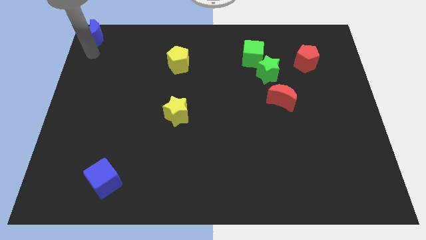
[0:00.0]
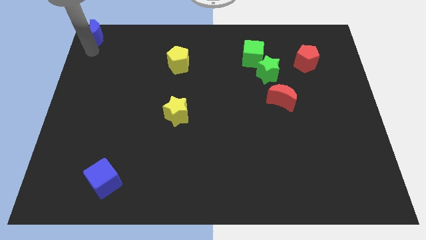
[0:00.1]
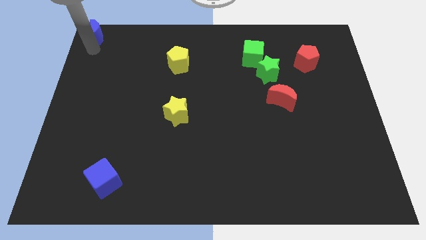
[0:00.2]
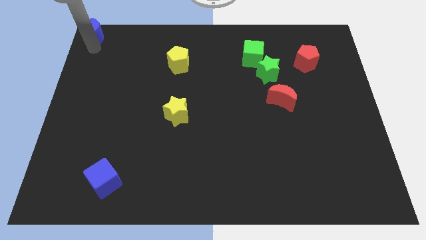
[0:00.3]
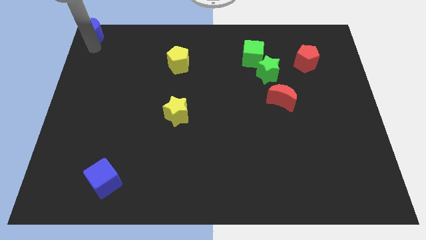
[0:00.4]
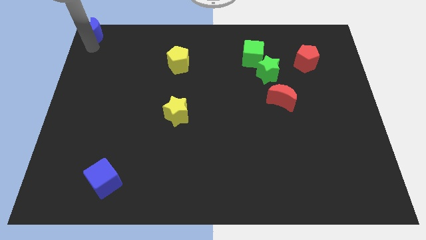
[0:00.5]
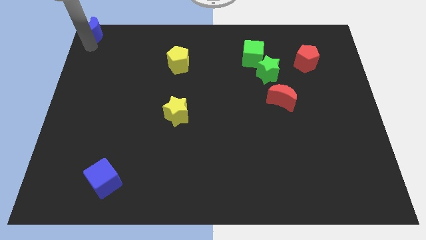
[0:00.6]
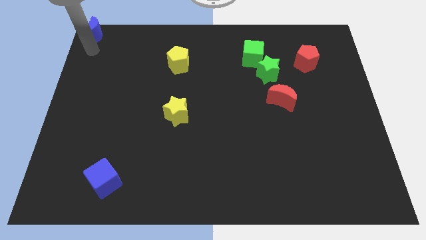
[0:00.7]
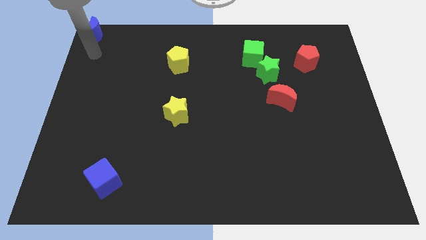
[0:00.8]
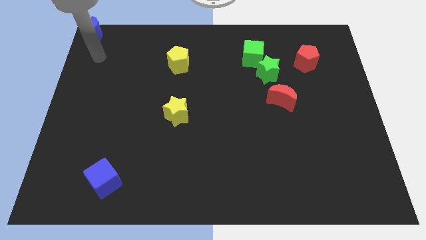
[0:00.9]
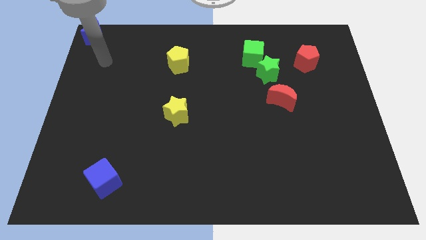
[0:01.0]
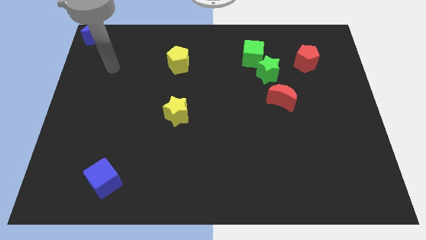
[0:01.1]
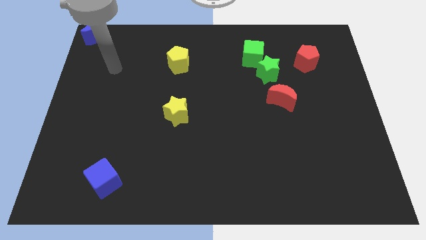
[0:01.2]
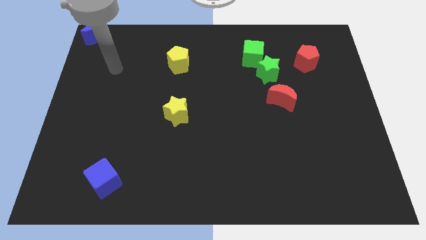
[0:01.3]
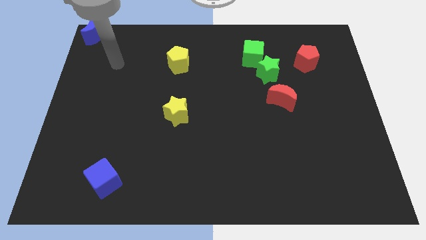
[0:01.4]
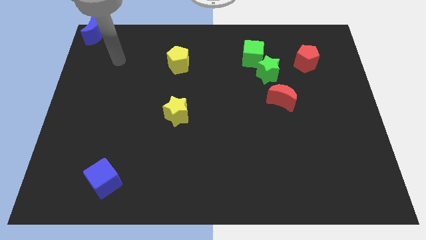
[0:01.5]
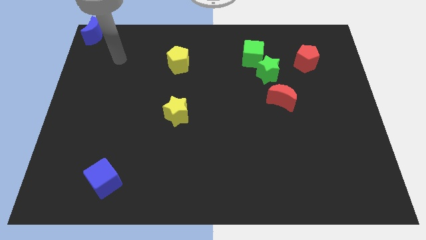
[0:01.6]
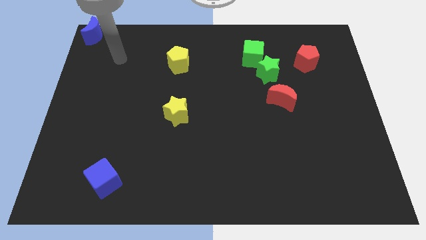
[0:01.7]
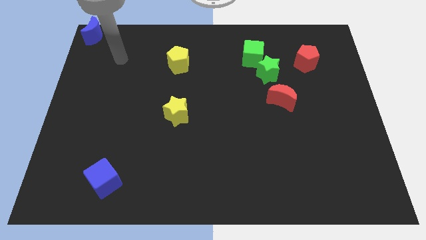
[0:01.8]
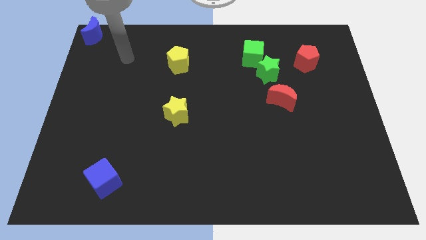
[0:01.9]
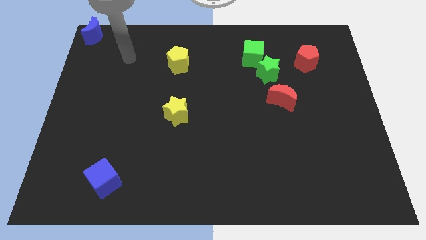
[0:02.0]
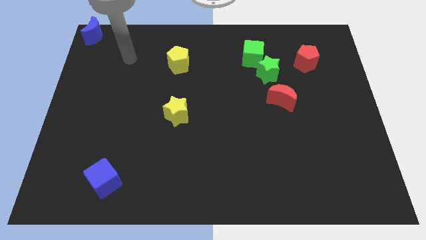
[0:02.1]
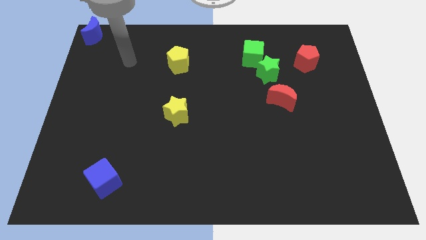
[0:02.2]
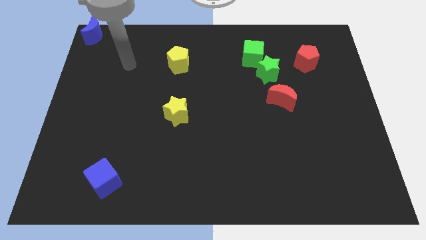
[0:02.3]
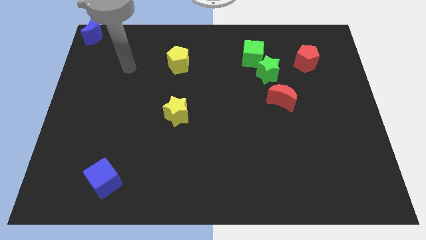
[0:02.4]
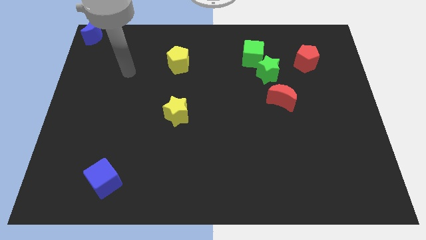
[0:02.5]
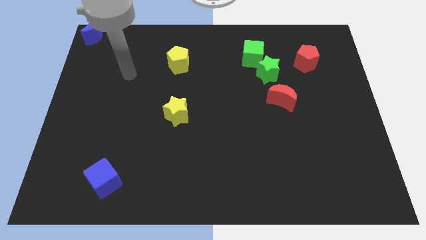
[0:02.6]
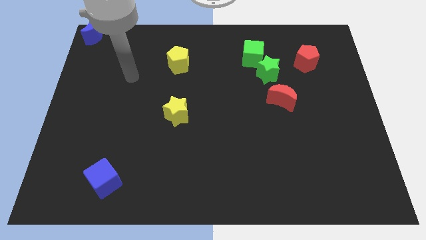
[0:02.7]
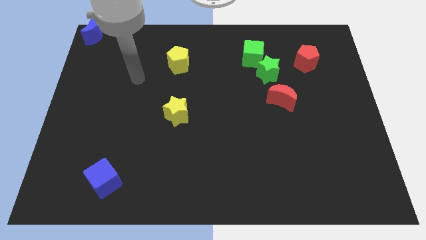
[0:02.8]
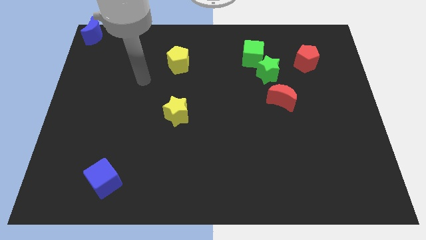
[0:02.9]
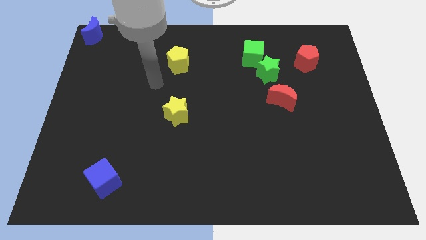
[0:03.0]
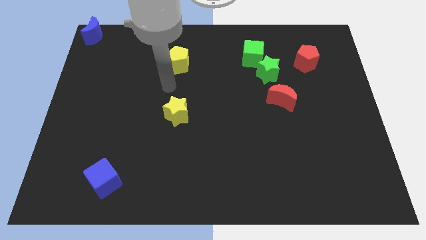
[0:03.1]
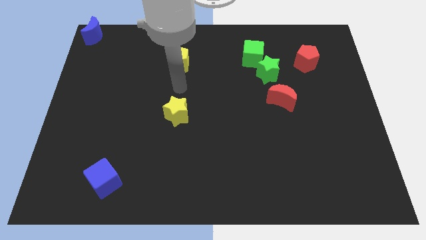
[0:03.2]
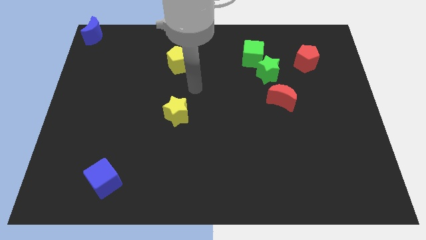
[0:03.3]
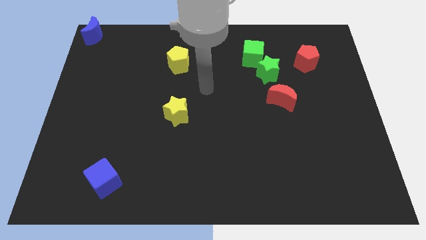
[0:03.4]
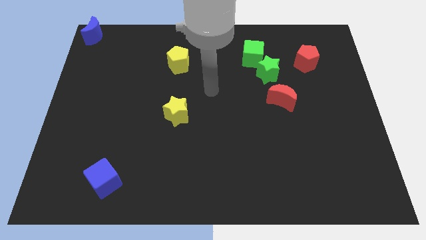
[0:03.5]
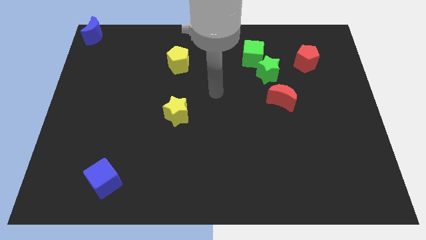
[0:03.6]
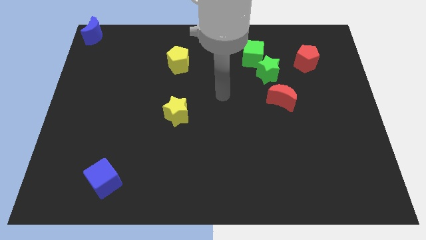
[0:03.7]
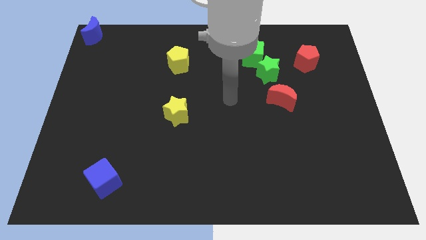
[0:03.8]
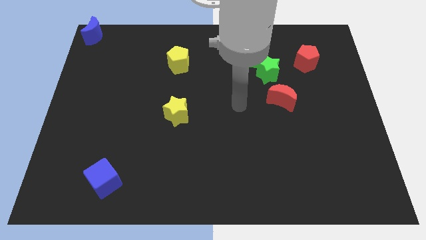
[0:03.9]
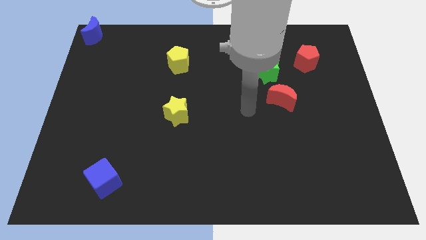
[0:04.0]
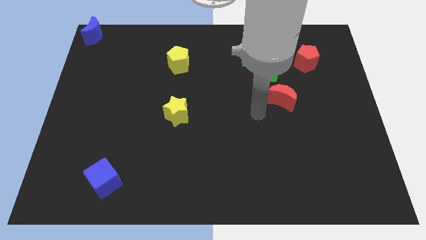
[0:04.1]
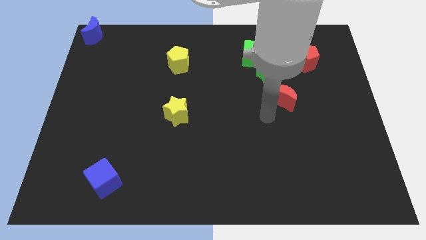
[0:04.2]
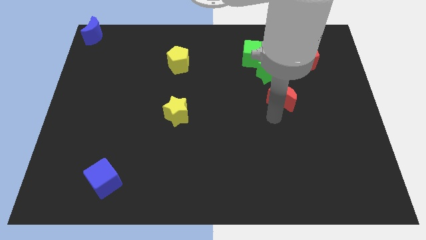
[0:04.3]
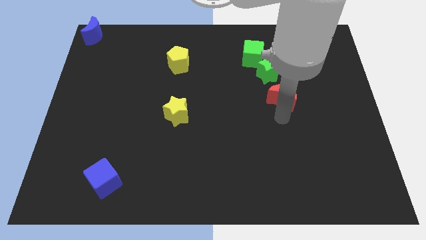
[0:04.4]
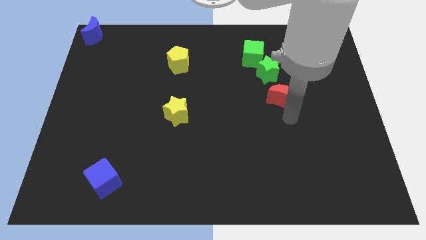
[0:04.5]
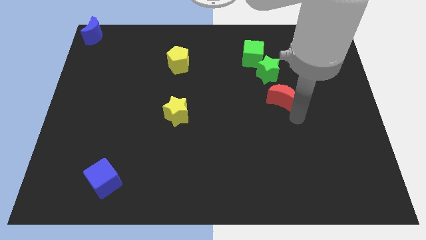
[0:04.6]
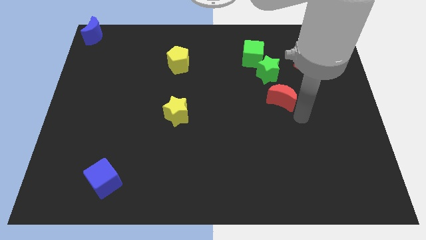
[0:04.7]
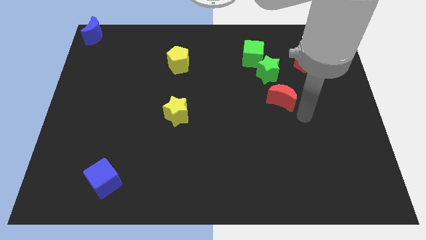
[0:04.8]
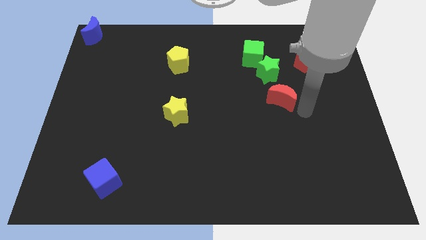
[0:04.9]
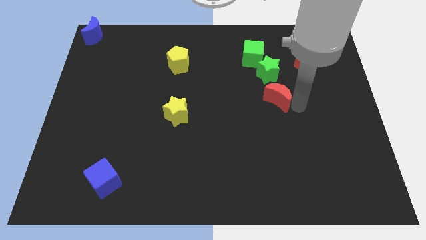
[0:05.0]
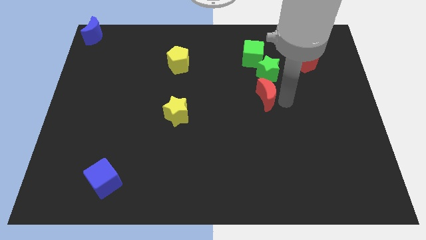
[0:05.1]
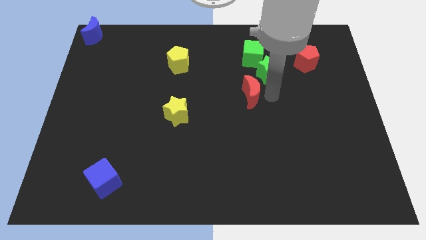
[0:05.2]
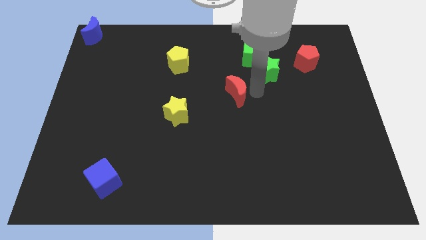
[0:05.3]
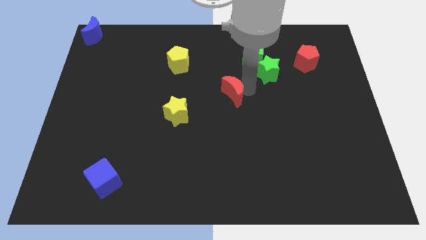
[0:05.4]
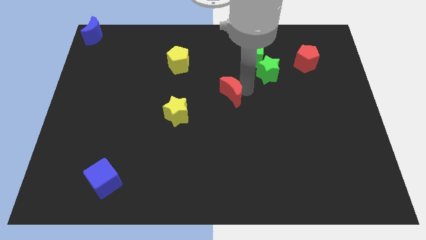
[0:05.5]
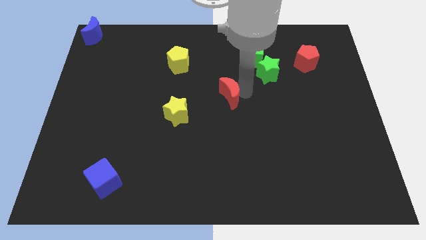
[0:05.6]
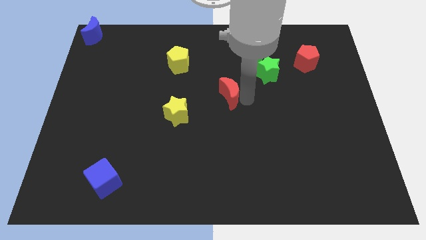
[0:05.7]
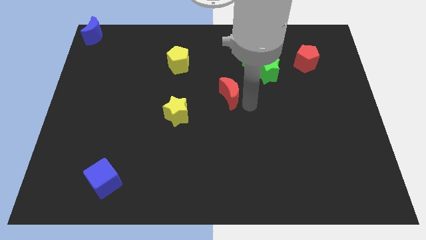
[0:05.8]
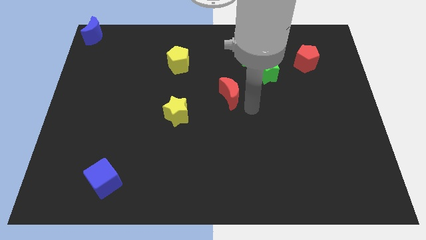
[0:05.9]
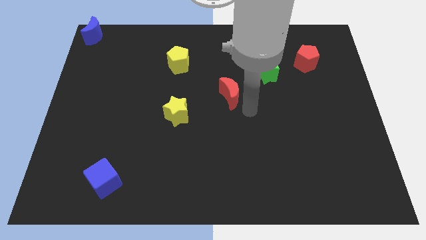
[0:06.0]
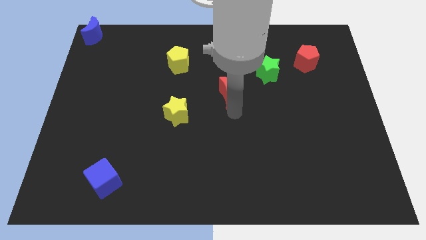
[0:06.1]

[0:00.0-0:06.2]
place the red crescent in between yellow star and green star

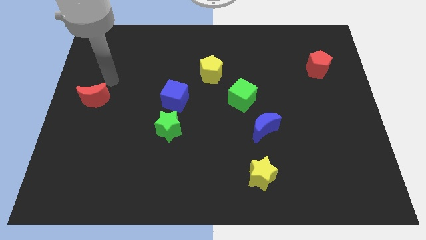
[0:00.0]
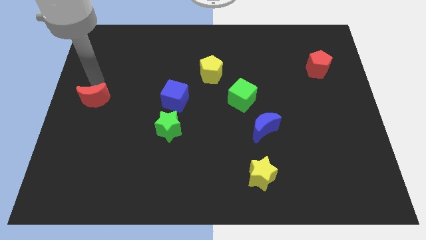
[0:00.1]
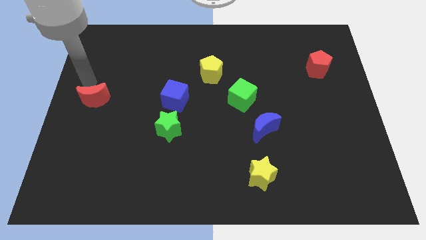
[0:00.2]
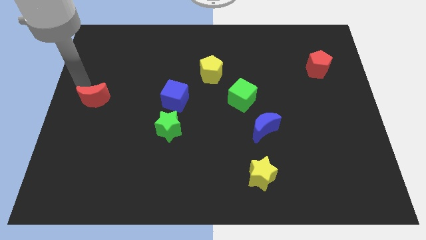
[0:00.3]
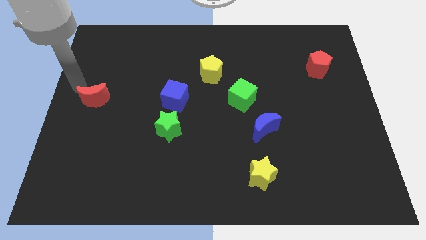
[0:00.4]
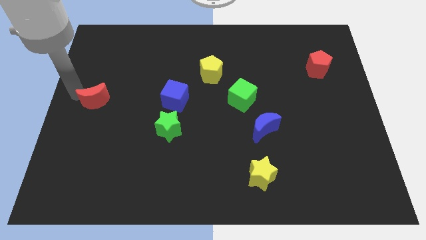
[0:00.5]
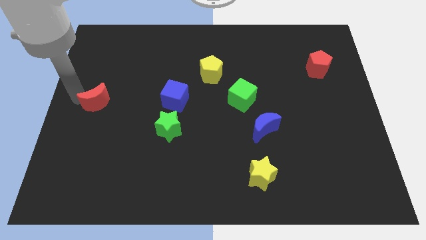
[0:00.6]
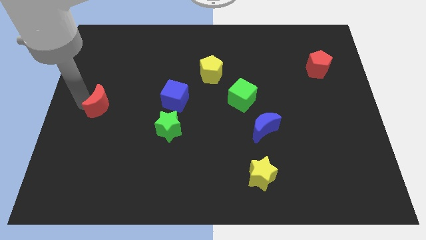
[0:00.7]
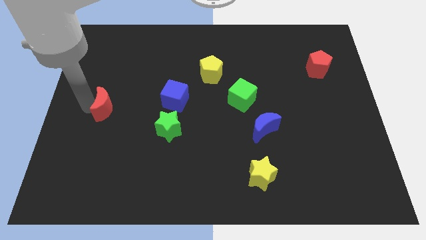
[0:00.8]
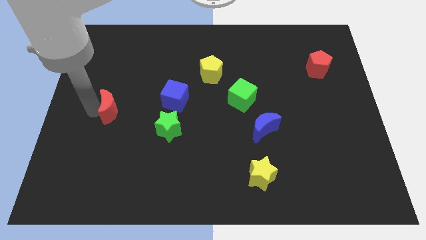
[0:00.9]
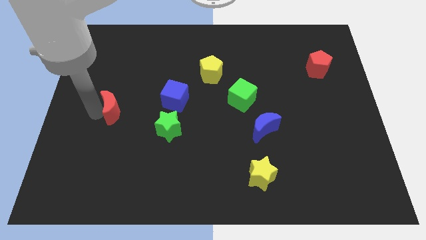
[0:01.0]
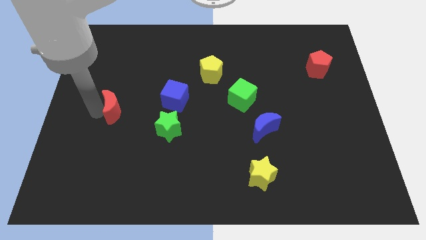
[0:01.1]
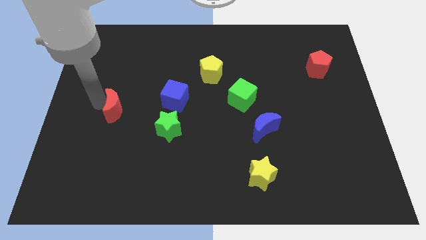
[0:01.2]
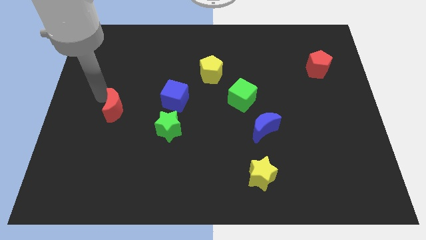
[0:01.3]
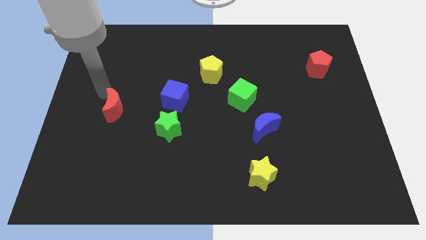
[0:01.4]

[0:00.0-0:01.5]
slide the red moon towards the right

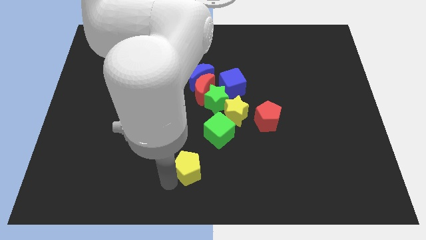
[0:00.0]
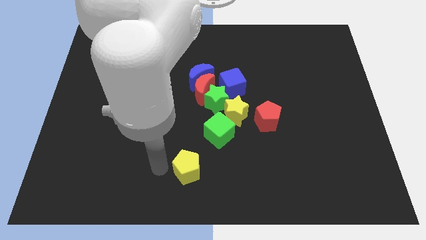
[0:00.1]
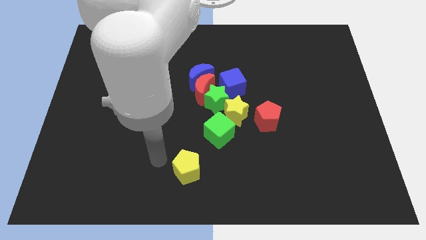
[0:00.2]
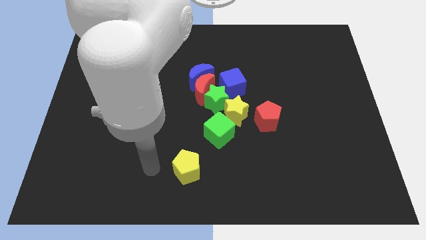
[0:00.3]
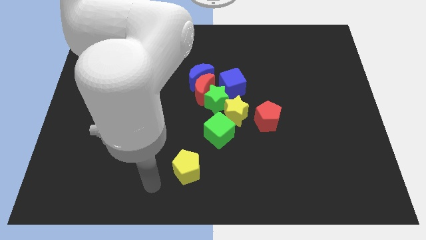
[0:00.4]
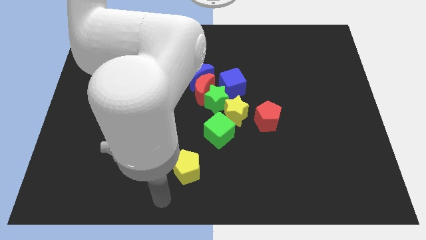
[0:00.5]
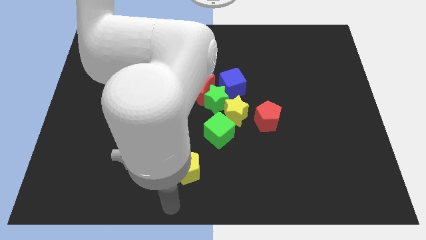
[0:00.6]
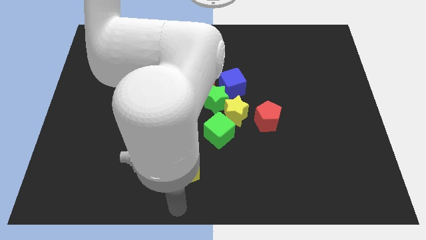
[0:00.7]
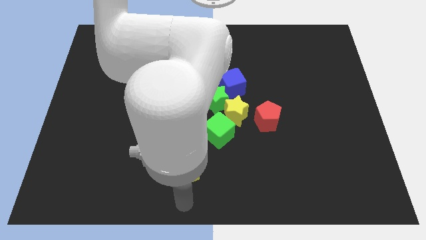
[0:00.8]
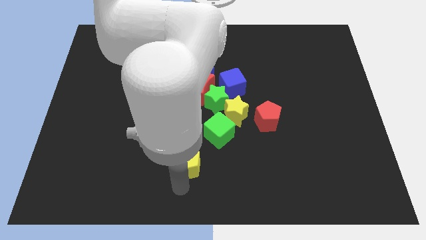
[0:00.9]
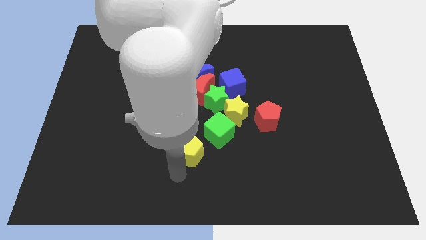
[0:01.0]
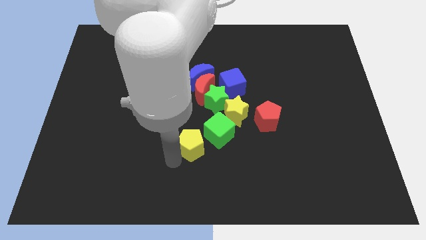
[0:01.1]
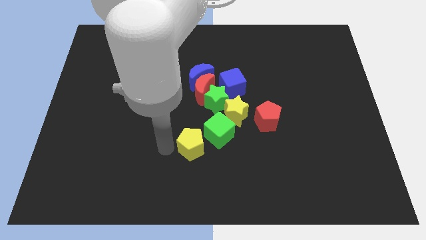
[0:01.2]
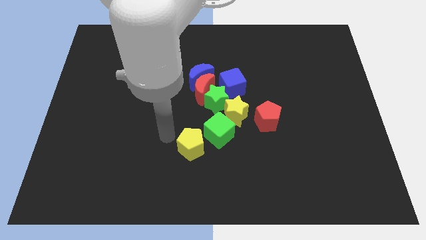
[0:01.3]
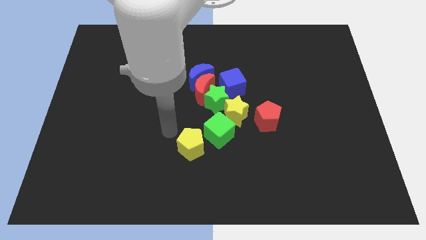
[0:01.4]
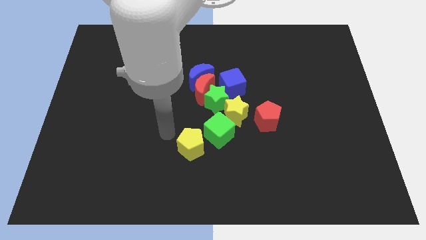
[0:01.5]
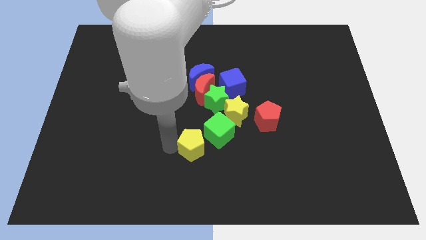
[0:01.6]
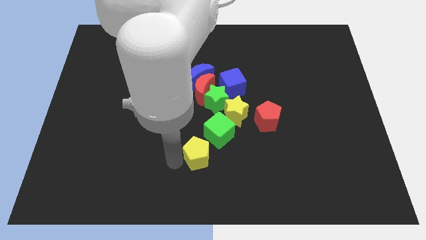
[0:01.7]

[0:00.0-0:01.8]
push yellow pentagon into group of blocks
